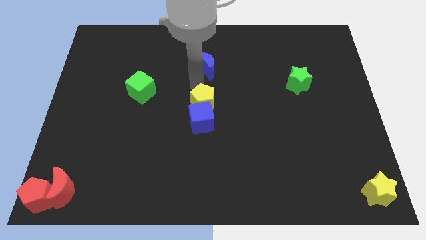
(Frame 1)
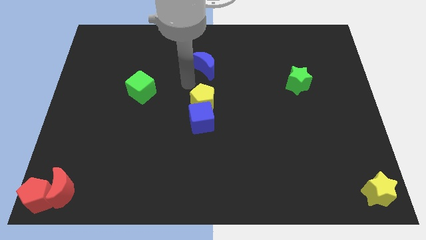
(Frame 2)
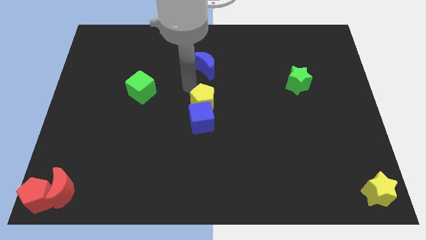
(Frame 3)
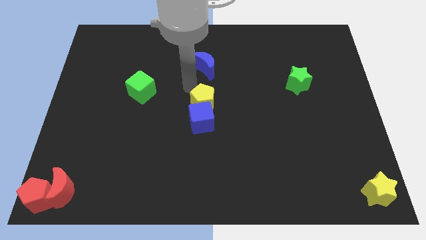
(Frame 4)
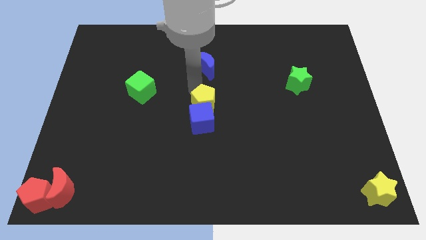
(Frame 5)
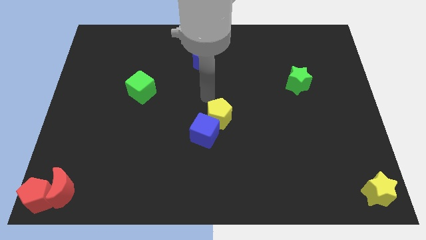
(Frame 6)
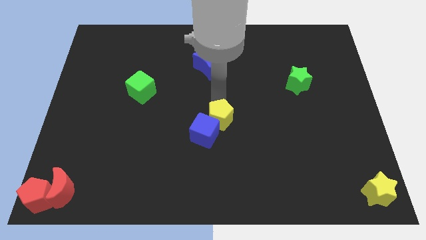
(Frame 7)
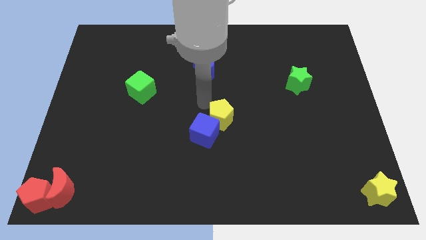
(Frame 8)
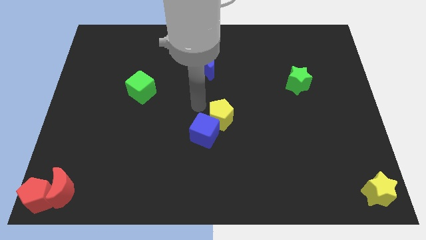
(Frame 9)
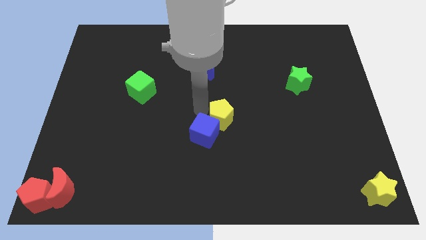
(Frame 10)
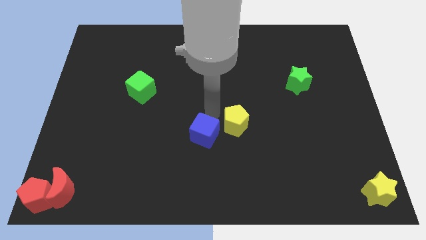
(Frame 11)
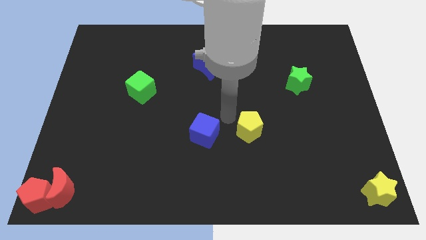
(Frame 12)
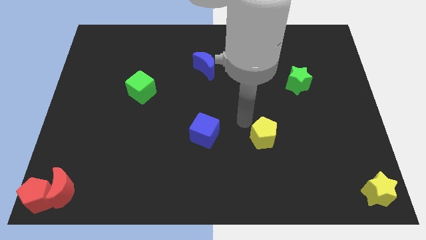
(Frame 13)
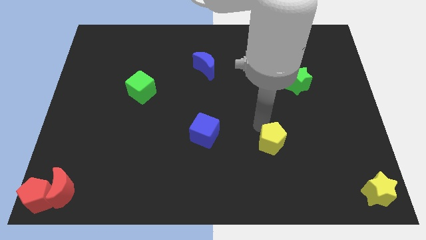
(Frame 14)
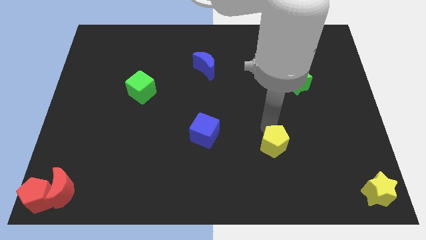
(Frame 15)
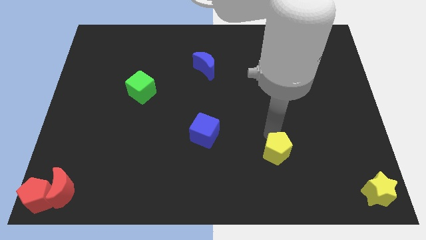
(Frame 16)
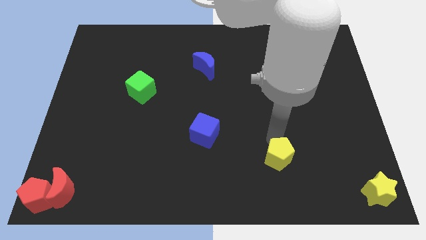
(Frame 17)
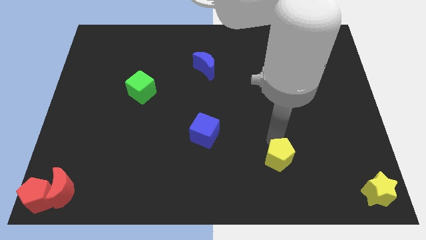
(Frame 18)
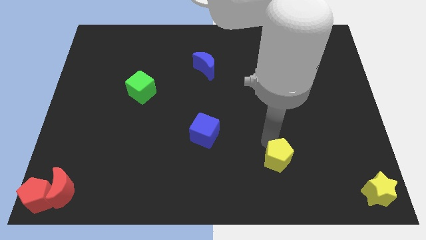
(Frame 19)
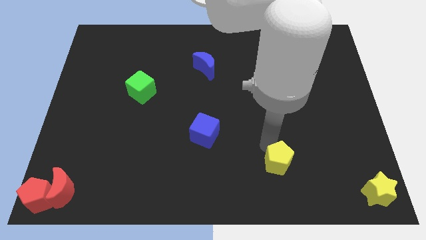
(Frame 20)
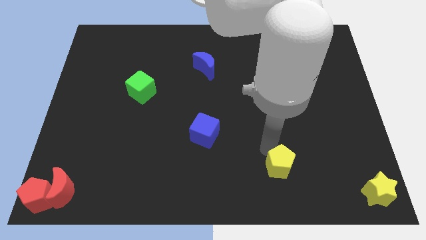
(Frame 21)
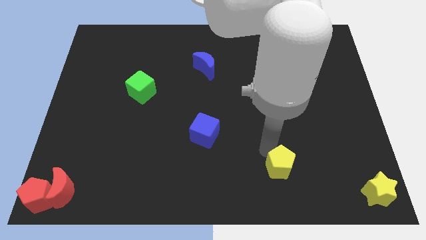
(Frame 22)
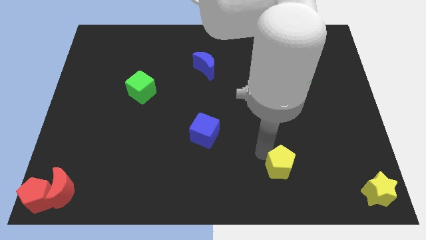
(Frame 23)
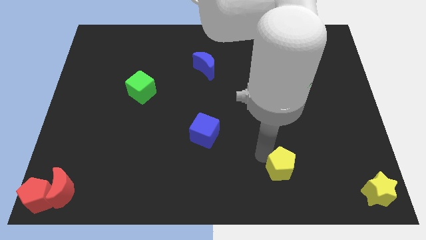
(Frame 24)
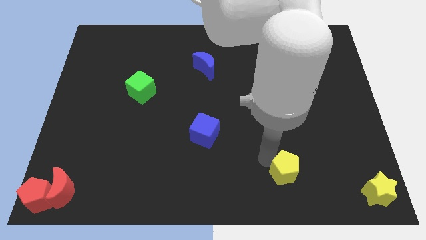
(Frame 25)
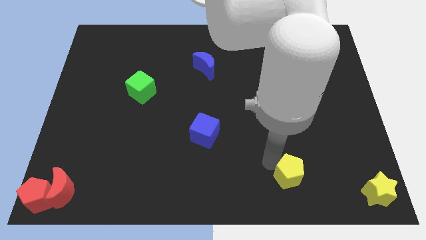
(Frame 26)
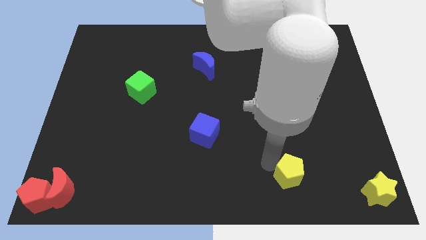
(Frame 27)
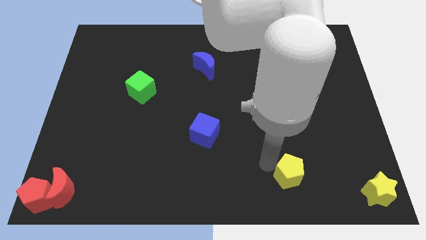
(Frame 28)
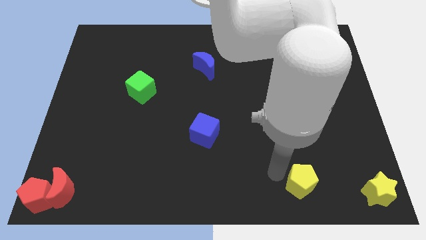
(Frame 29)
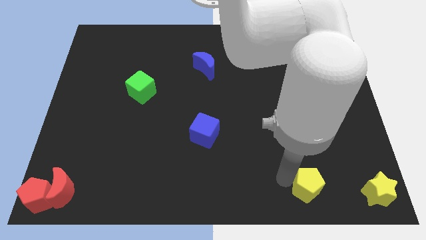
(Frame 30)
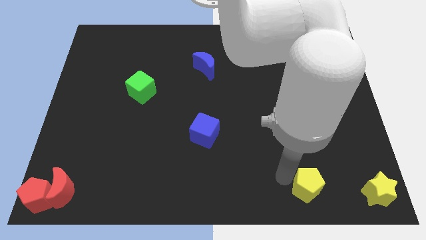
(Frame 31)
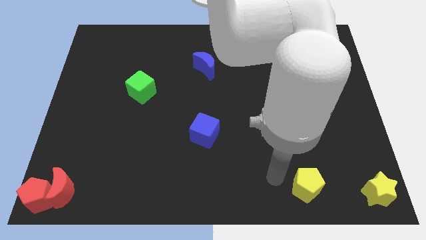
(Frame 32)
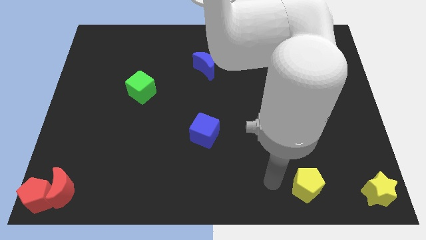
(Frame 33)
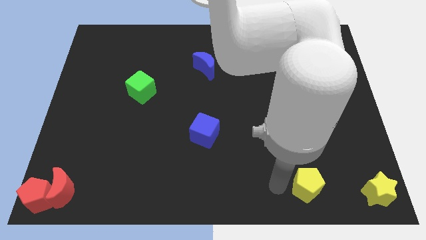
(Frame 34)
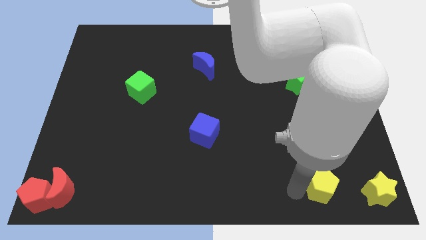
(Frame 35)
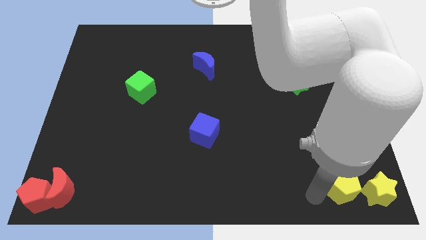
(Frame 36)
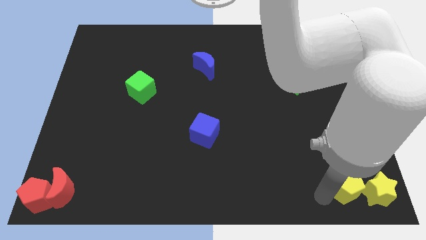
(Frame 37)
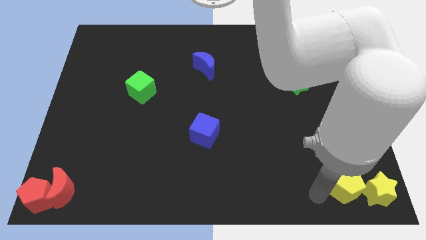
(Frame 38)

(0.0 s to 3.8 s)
drag the yellow pentagon close to the left side of the yellow star

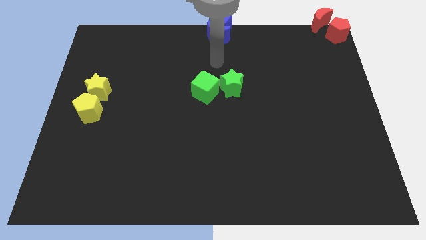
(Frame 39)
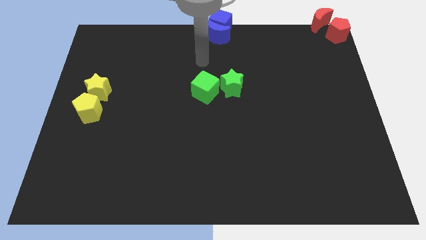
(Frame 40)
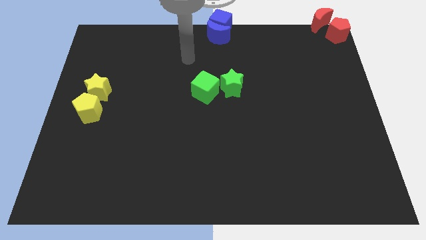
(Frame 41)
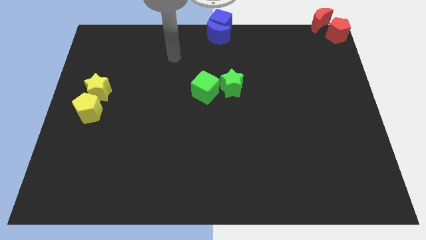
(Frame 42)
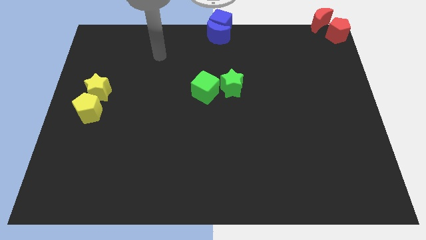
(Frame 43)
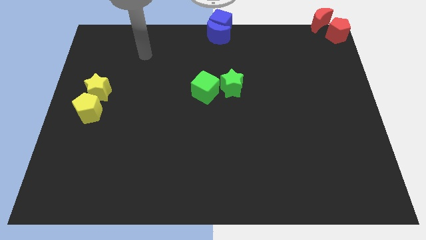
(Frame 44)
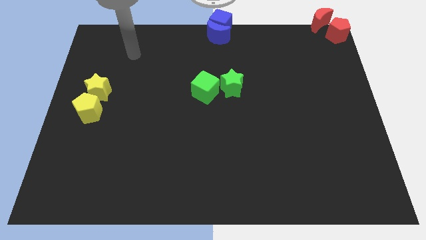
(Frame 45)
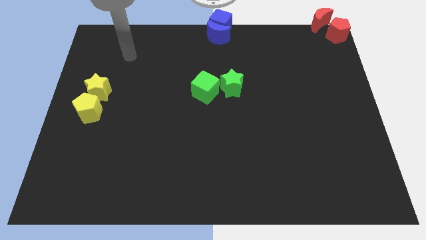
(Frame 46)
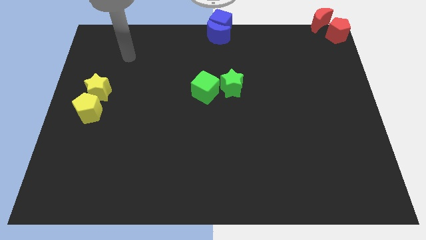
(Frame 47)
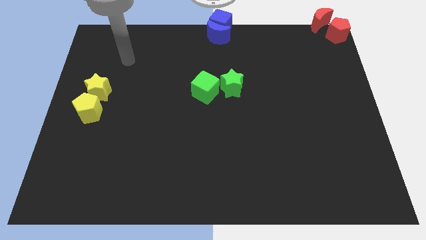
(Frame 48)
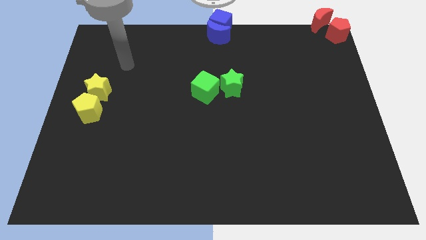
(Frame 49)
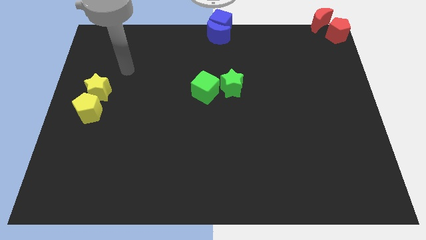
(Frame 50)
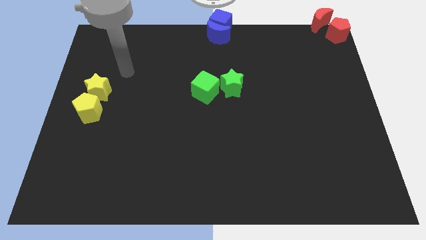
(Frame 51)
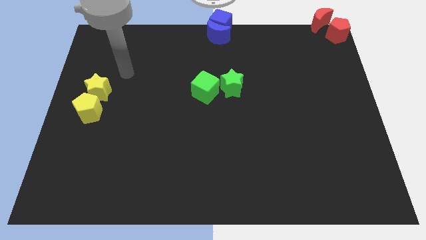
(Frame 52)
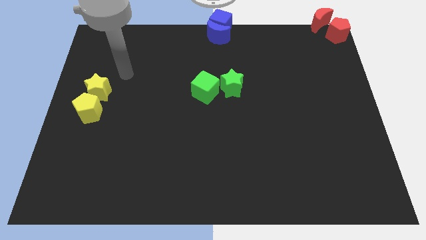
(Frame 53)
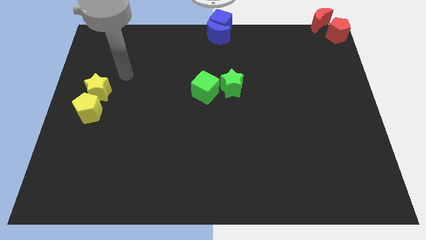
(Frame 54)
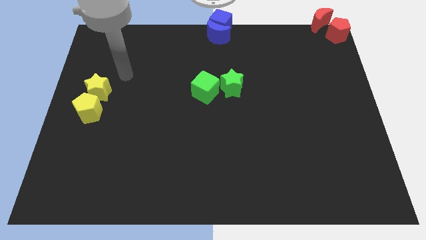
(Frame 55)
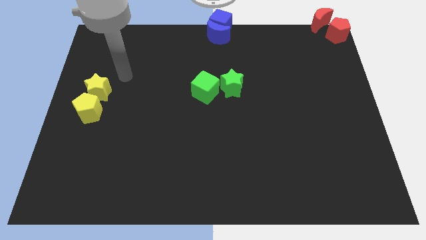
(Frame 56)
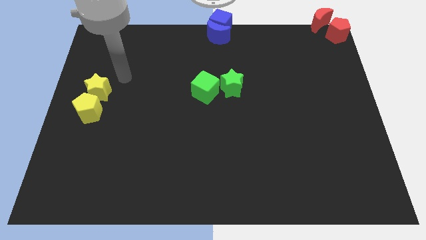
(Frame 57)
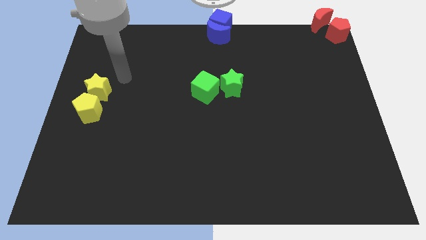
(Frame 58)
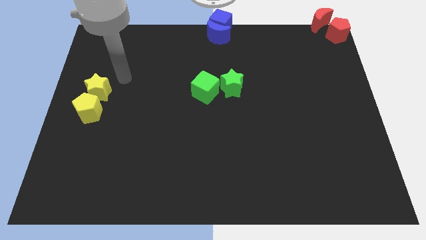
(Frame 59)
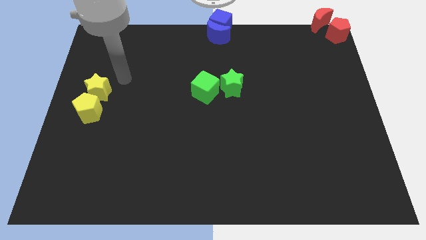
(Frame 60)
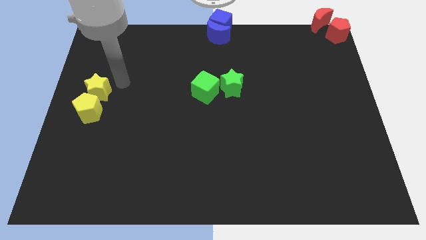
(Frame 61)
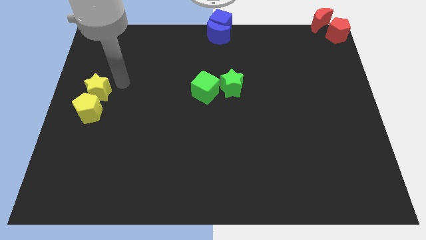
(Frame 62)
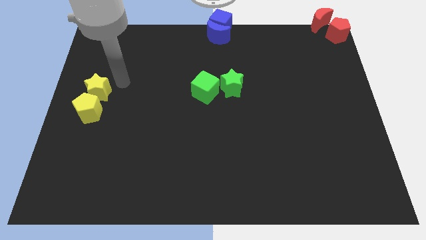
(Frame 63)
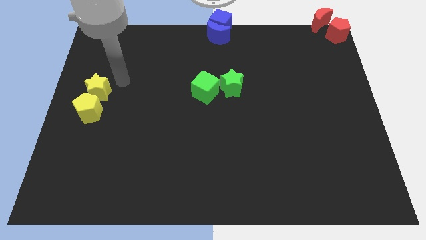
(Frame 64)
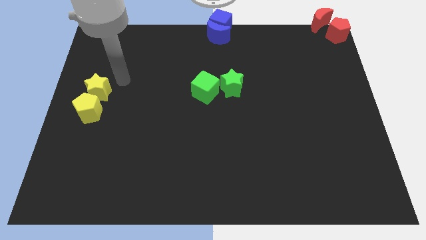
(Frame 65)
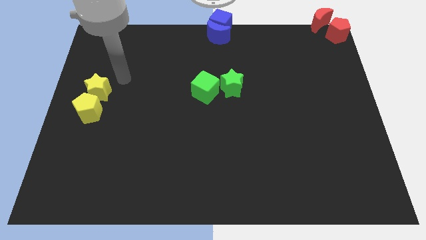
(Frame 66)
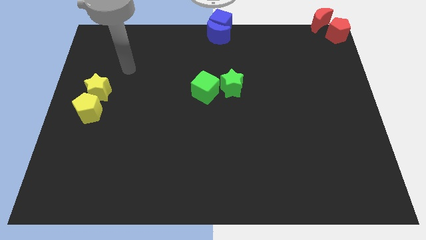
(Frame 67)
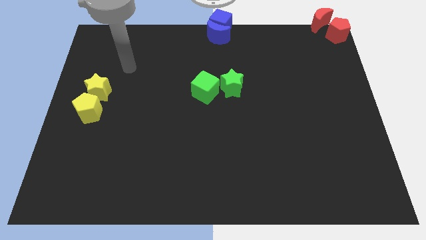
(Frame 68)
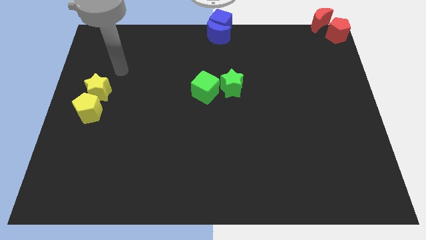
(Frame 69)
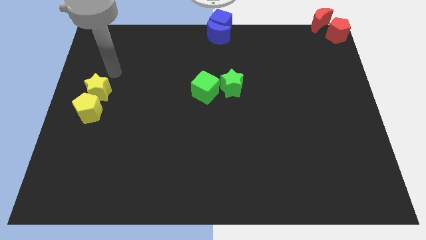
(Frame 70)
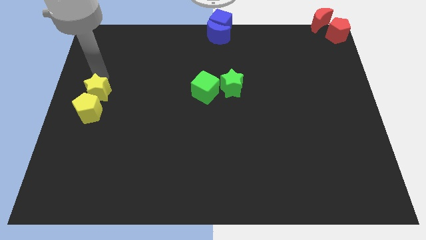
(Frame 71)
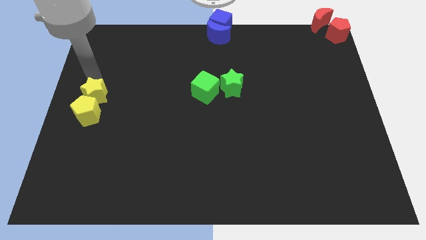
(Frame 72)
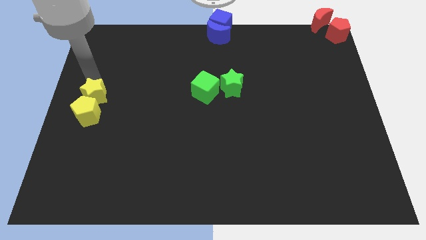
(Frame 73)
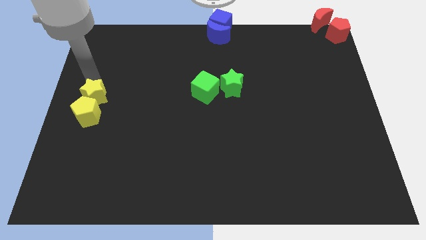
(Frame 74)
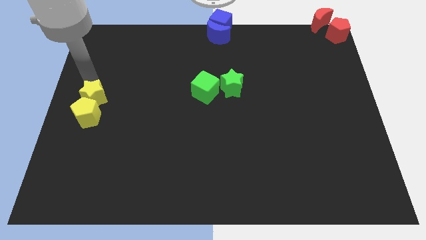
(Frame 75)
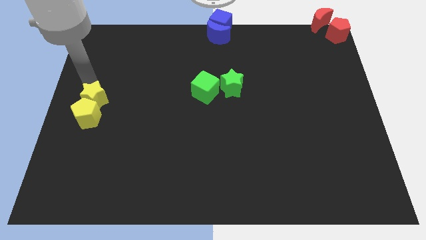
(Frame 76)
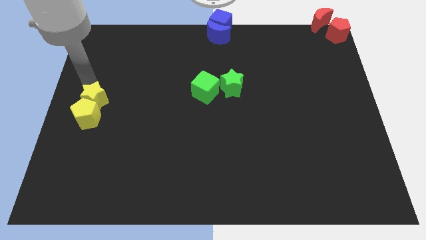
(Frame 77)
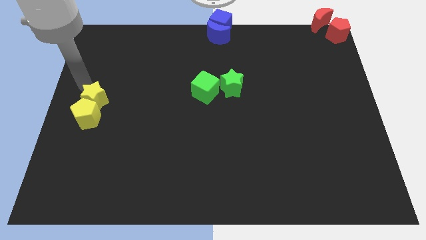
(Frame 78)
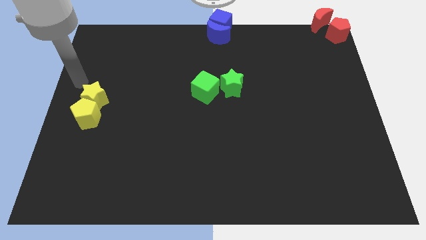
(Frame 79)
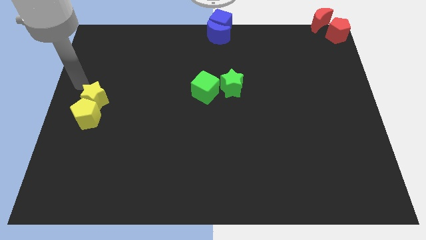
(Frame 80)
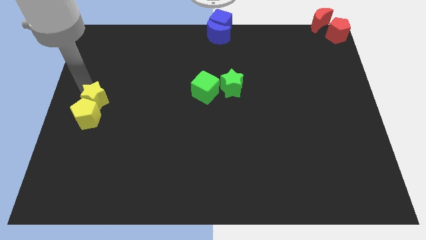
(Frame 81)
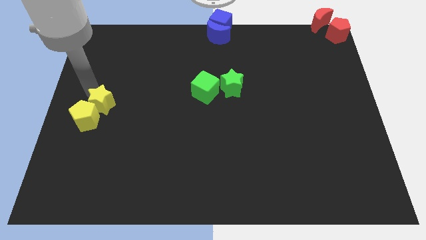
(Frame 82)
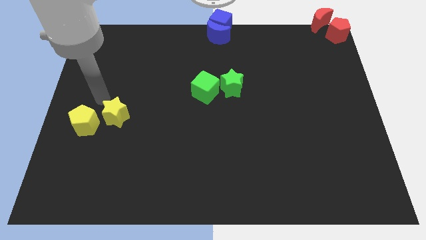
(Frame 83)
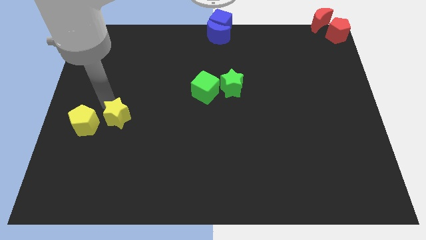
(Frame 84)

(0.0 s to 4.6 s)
separate yellow star from the yellow pentagon

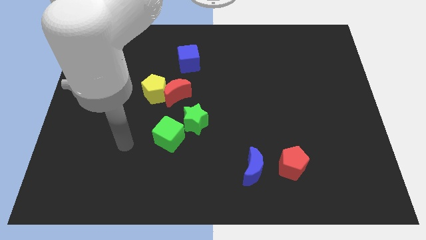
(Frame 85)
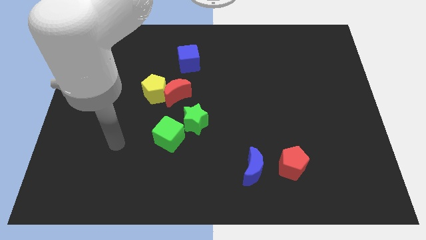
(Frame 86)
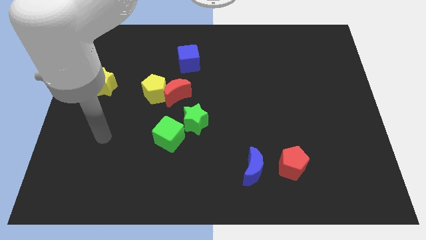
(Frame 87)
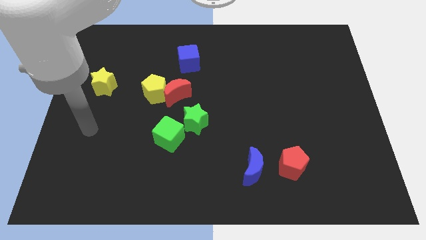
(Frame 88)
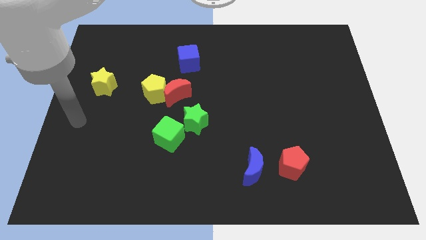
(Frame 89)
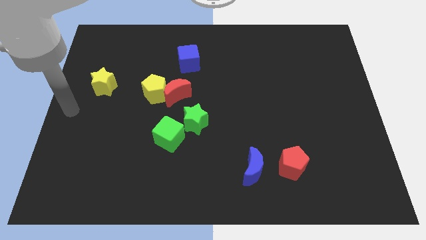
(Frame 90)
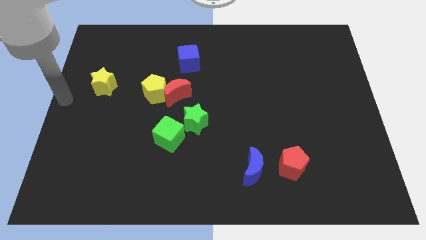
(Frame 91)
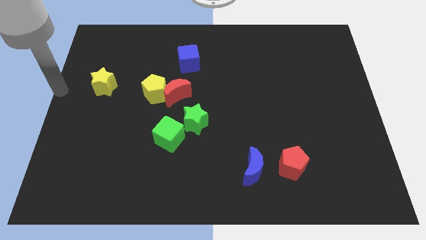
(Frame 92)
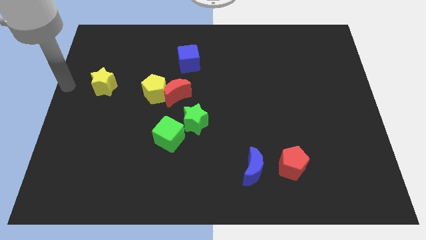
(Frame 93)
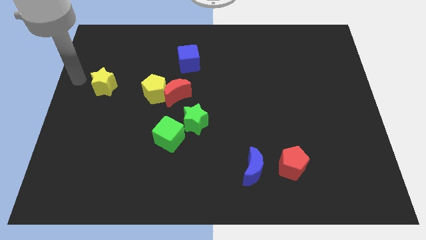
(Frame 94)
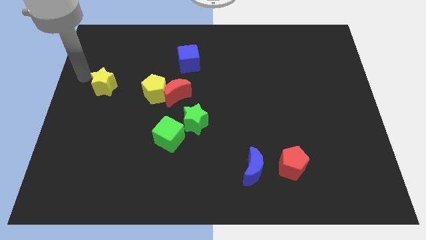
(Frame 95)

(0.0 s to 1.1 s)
move your arm away from the green cube
